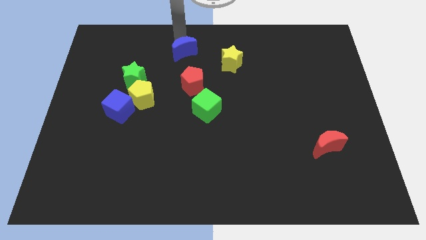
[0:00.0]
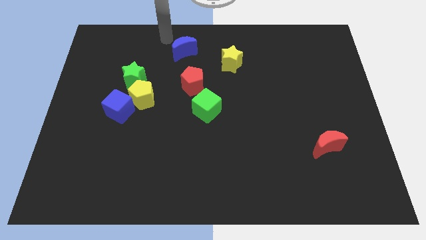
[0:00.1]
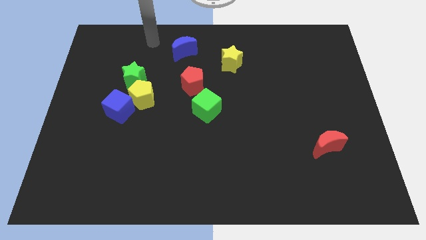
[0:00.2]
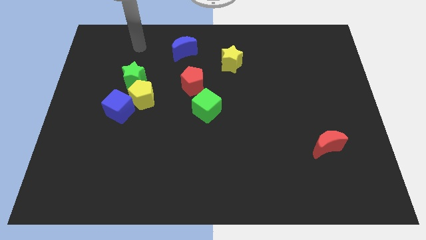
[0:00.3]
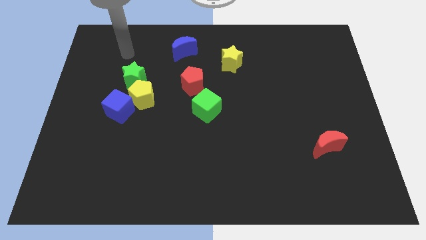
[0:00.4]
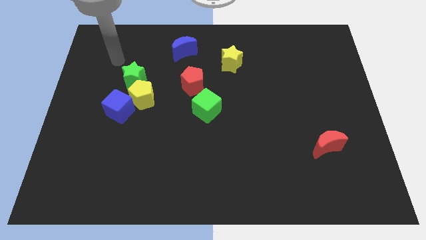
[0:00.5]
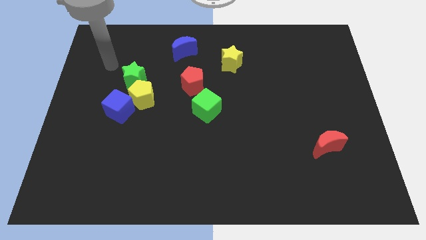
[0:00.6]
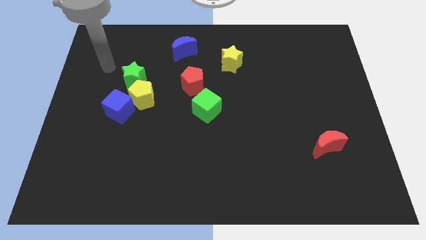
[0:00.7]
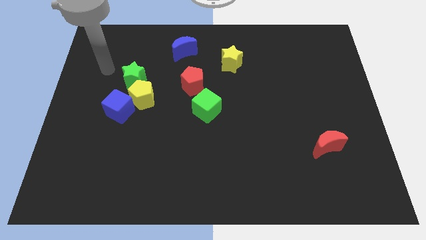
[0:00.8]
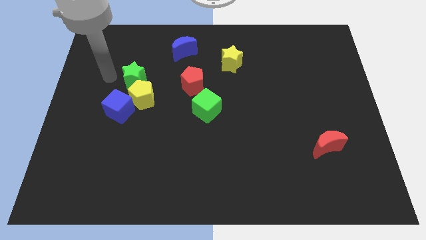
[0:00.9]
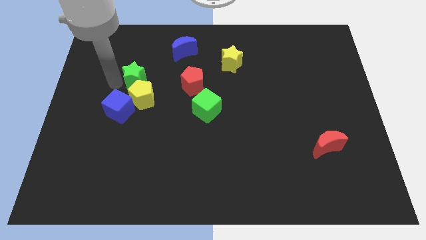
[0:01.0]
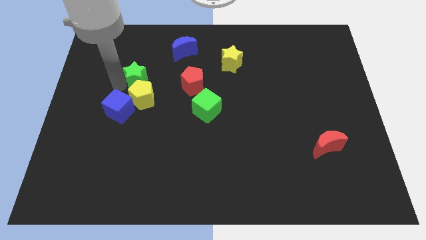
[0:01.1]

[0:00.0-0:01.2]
place the arm left to the green star

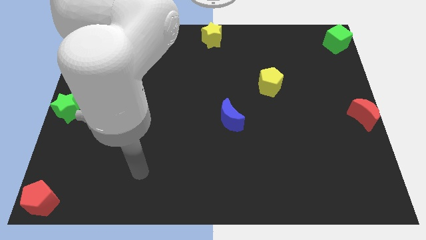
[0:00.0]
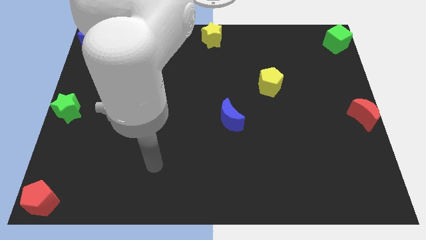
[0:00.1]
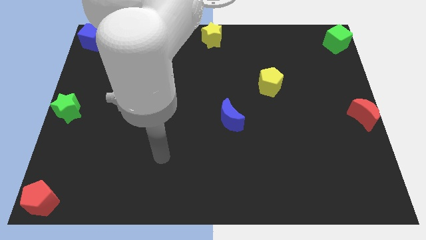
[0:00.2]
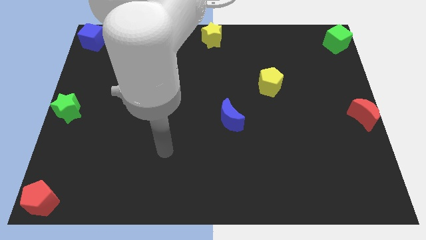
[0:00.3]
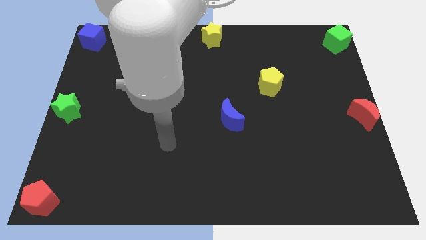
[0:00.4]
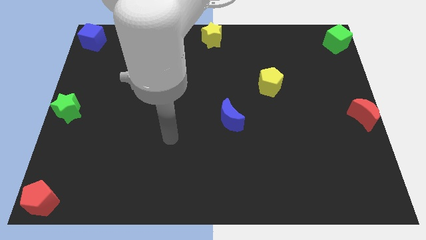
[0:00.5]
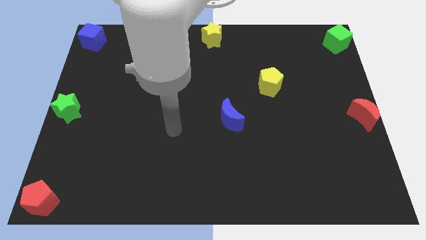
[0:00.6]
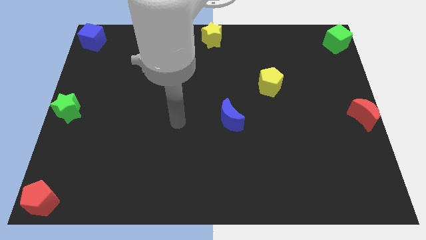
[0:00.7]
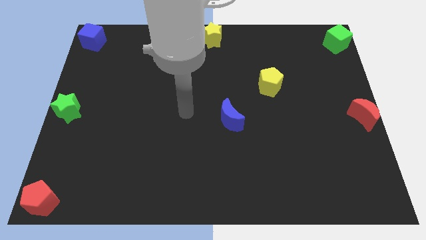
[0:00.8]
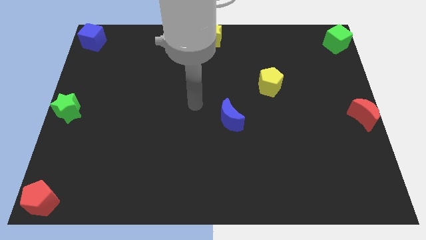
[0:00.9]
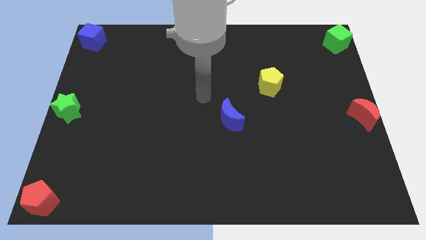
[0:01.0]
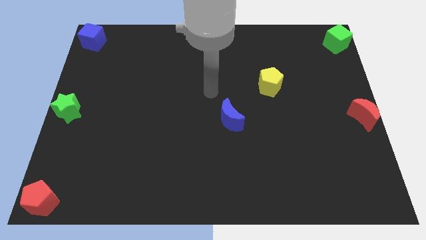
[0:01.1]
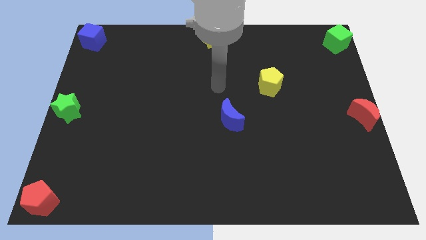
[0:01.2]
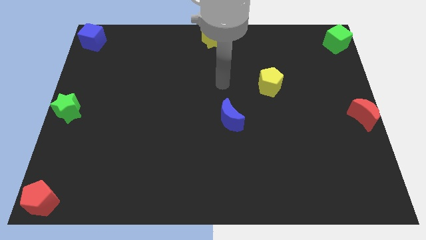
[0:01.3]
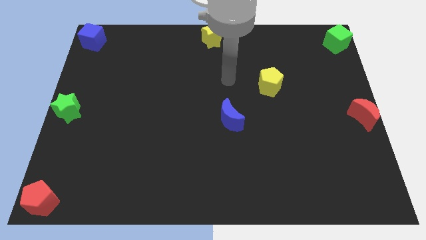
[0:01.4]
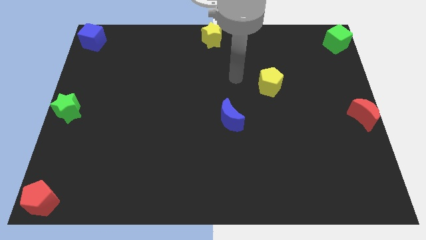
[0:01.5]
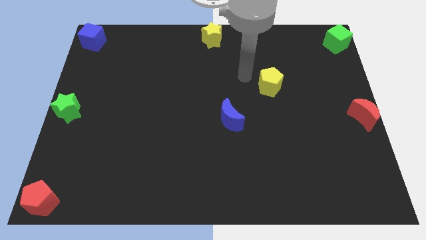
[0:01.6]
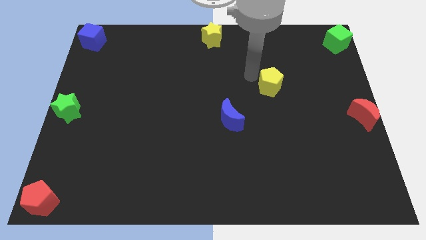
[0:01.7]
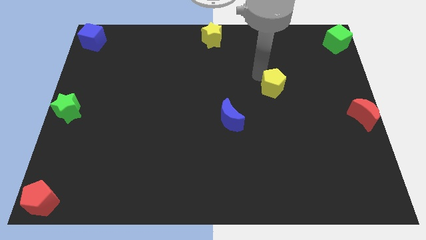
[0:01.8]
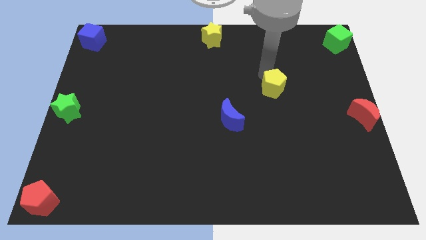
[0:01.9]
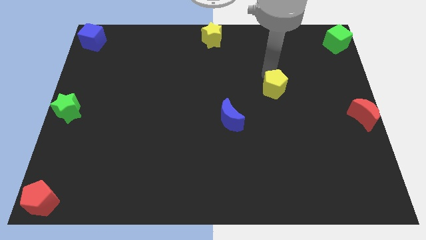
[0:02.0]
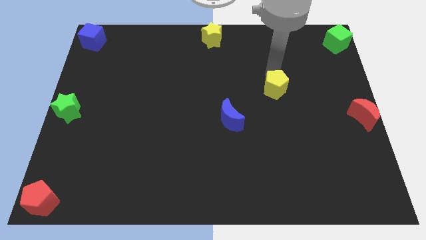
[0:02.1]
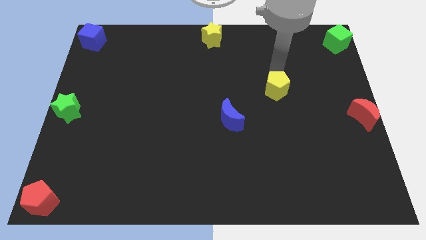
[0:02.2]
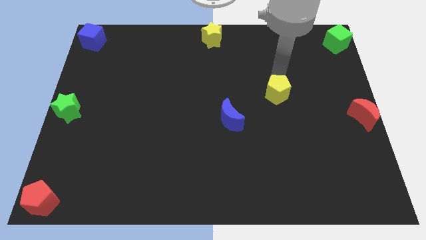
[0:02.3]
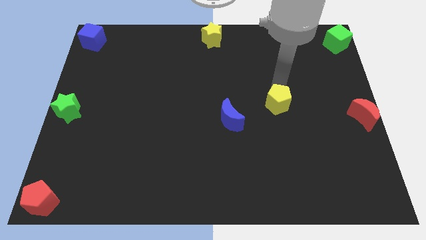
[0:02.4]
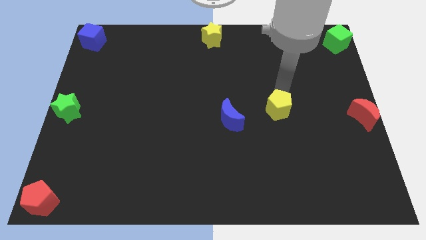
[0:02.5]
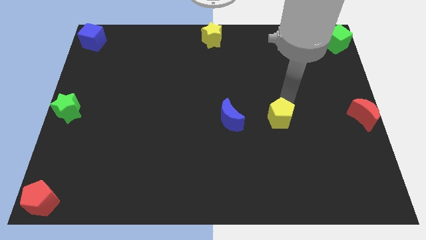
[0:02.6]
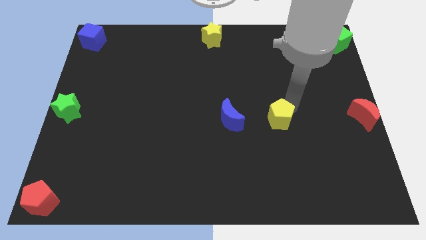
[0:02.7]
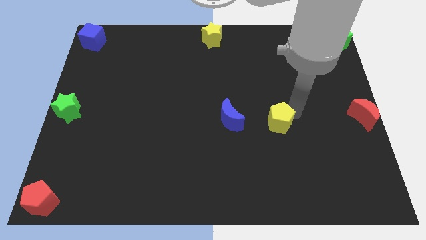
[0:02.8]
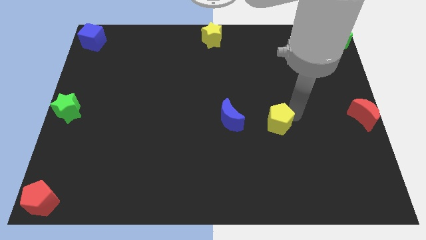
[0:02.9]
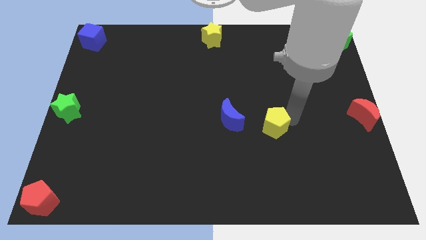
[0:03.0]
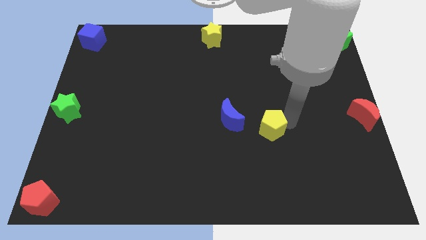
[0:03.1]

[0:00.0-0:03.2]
move the yellow pentagon right beside the blue moon

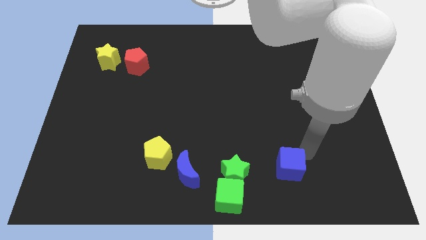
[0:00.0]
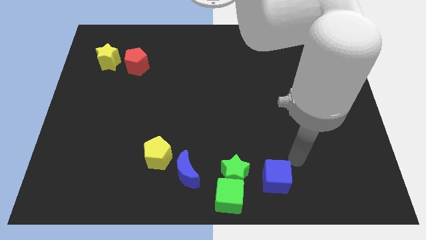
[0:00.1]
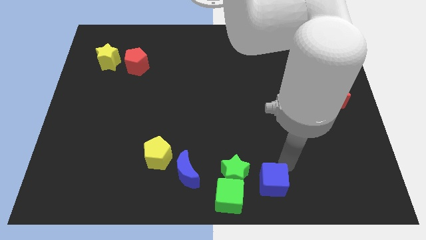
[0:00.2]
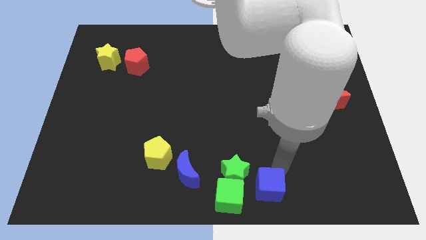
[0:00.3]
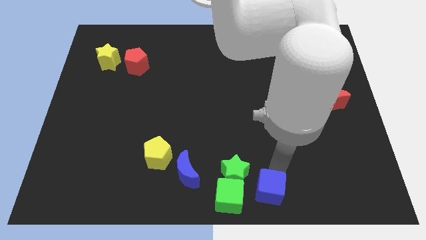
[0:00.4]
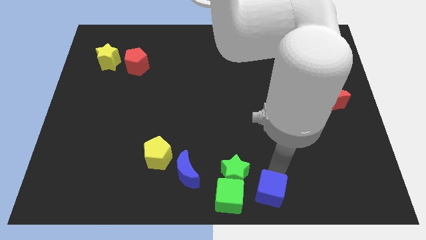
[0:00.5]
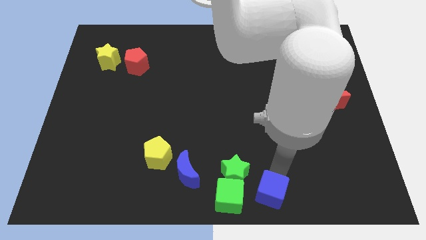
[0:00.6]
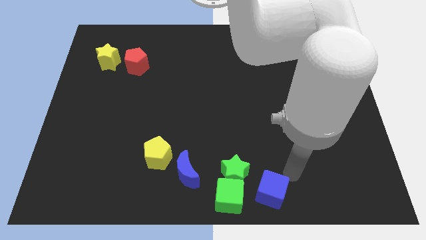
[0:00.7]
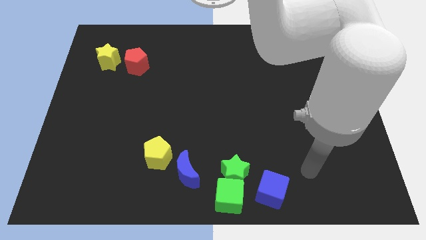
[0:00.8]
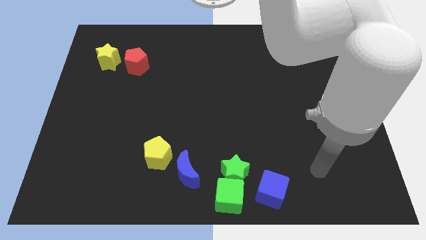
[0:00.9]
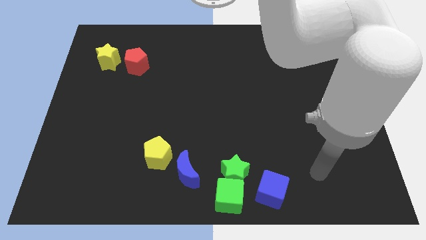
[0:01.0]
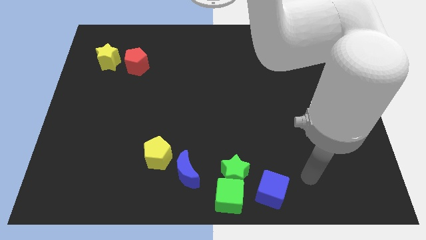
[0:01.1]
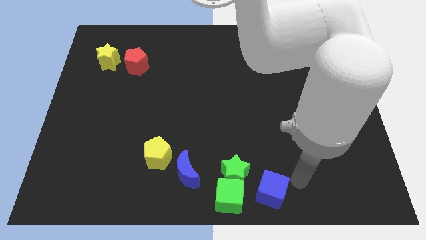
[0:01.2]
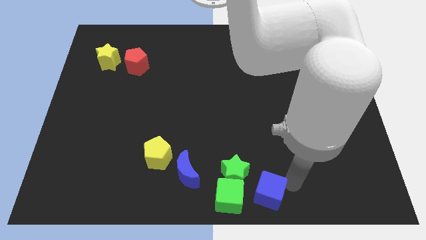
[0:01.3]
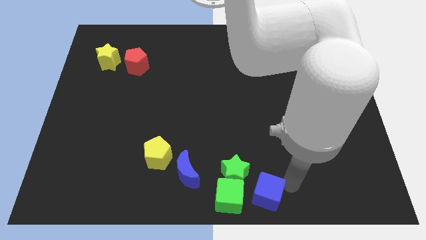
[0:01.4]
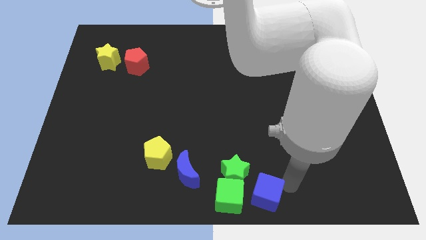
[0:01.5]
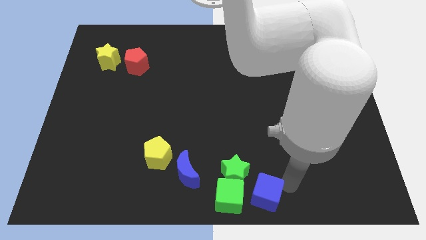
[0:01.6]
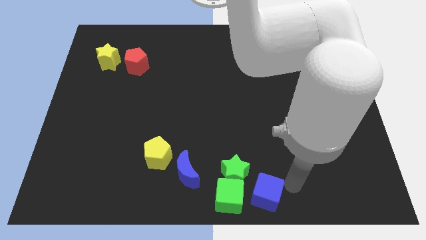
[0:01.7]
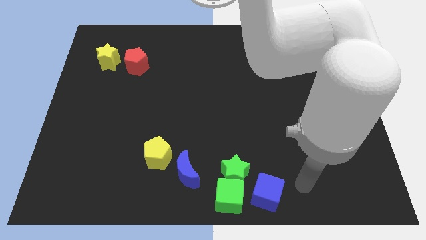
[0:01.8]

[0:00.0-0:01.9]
place the blue cube to the right of green star and green cube

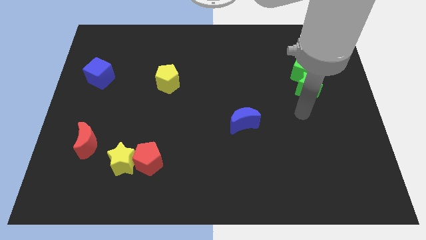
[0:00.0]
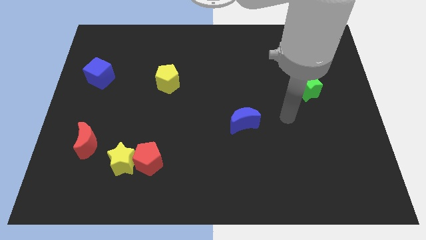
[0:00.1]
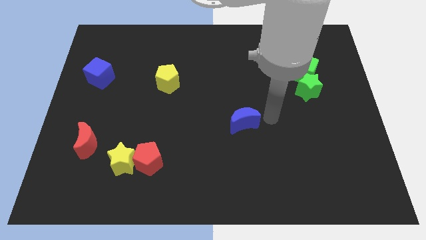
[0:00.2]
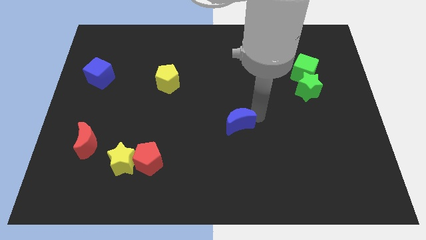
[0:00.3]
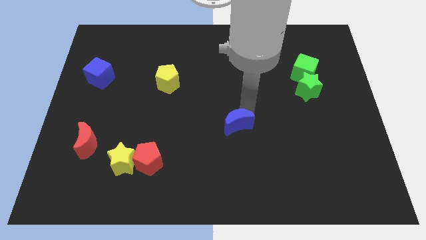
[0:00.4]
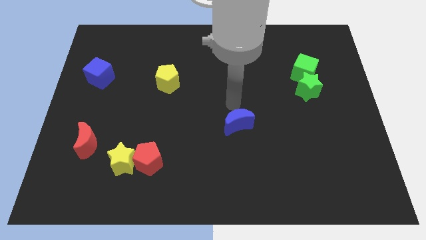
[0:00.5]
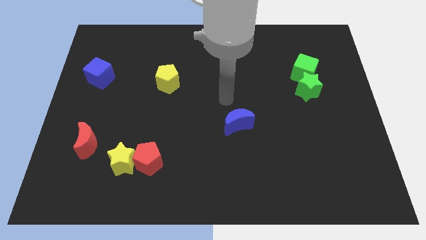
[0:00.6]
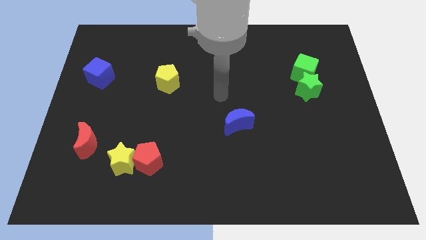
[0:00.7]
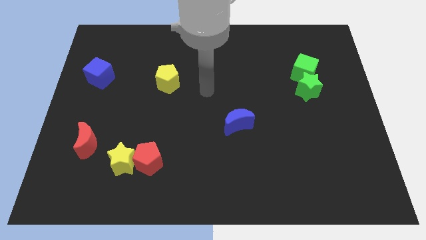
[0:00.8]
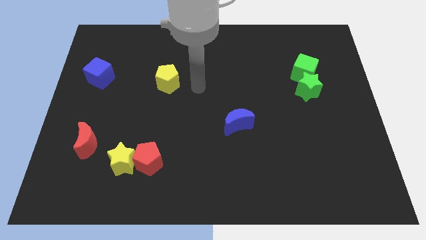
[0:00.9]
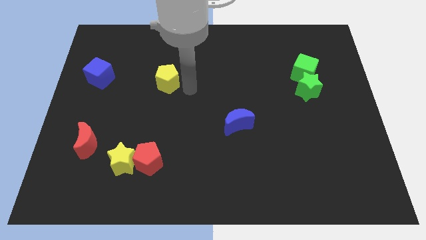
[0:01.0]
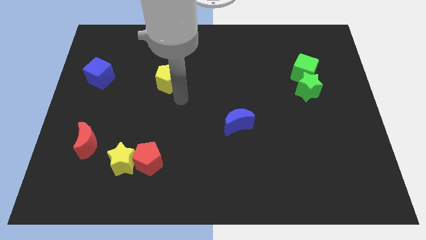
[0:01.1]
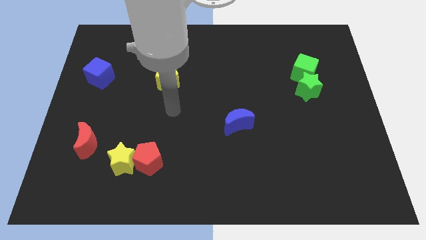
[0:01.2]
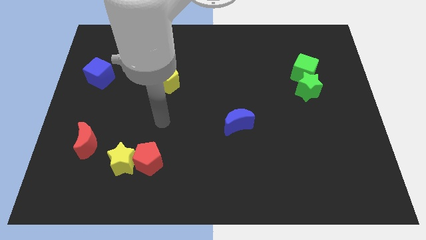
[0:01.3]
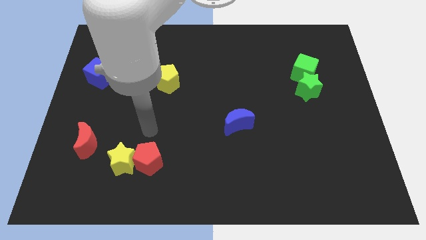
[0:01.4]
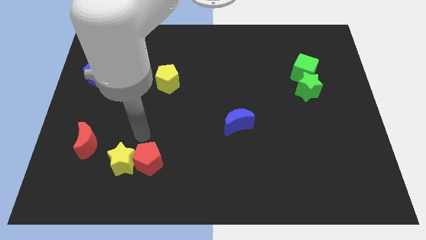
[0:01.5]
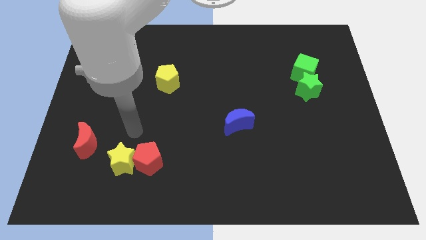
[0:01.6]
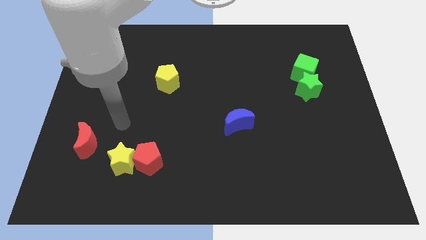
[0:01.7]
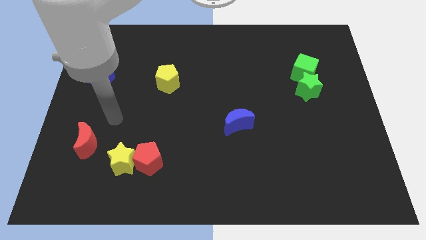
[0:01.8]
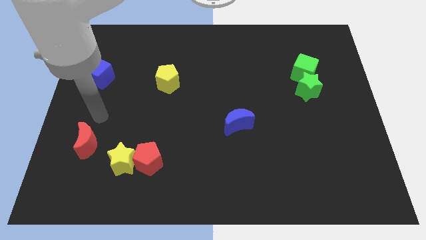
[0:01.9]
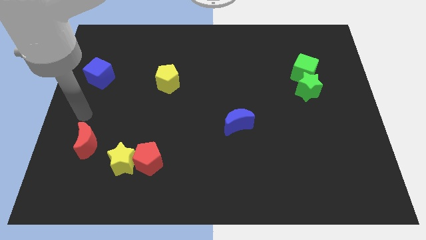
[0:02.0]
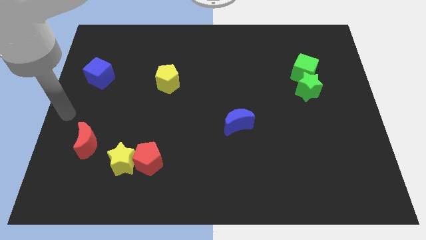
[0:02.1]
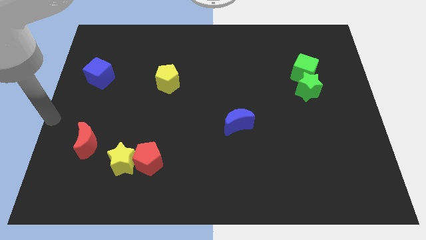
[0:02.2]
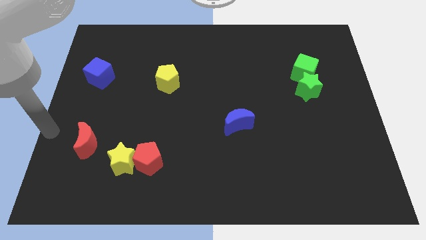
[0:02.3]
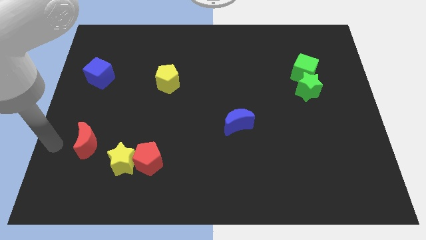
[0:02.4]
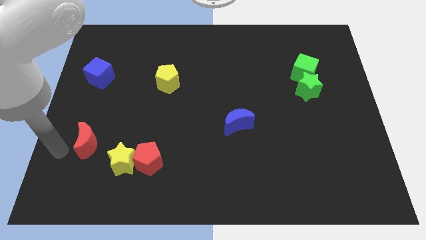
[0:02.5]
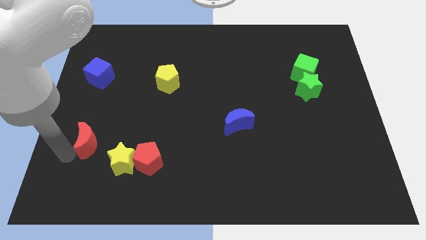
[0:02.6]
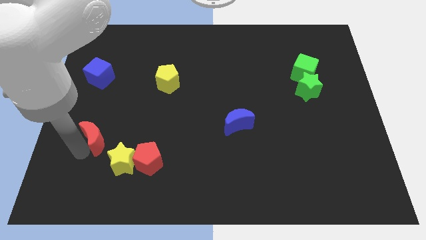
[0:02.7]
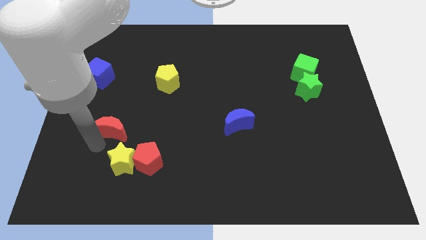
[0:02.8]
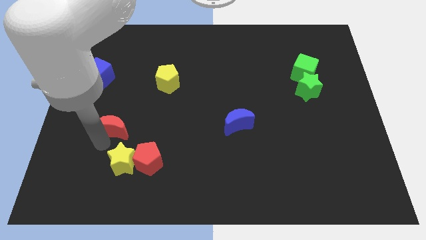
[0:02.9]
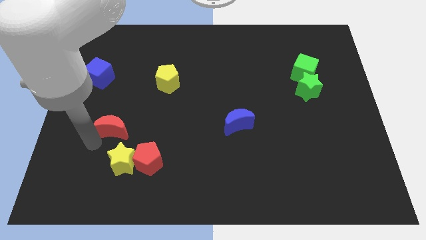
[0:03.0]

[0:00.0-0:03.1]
move the red crescent slightly towards up
